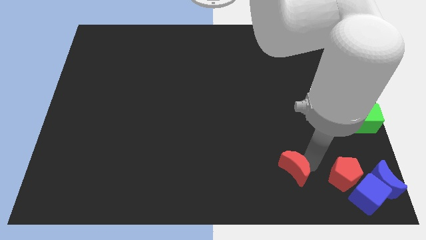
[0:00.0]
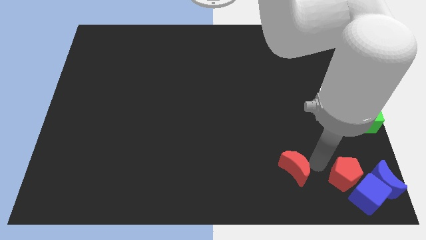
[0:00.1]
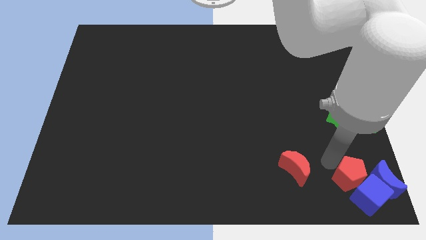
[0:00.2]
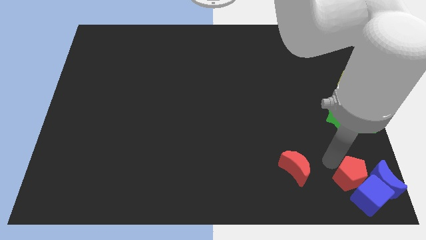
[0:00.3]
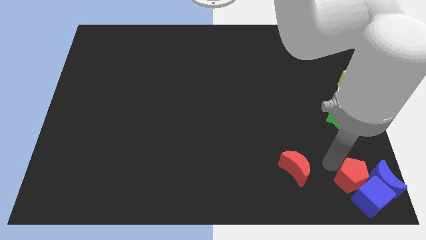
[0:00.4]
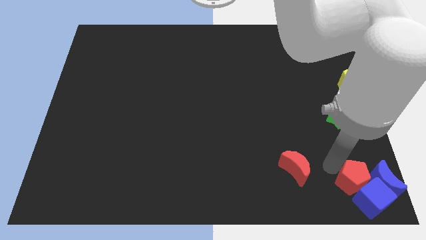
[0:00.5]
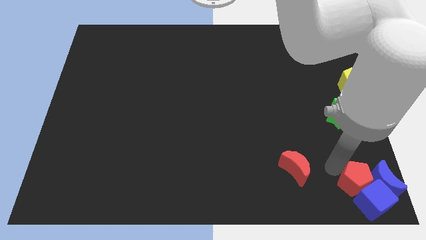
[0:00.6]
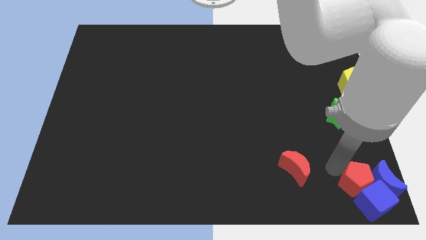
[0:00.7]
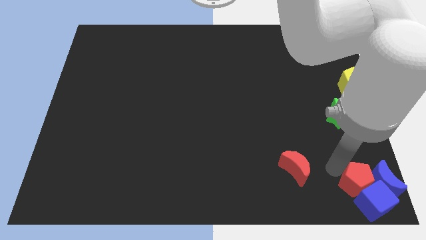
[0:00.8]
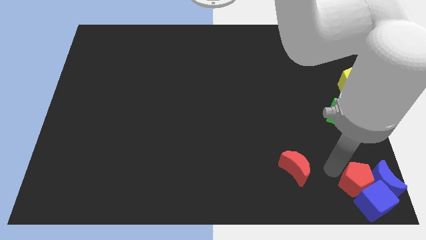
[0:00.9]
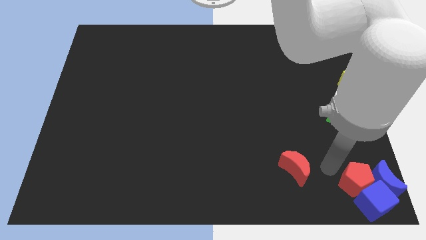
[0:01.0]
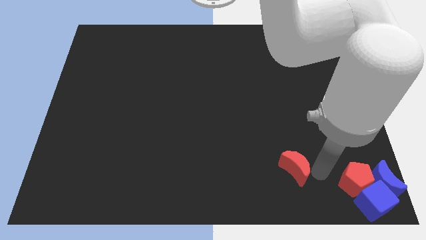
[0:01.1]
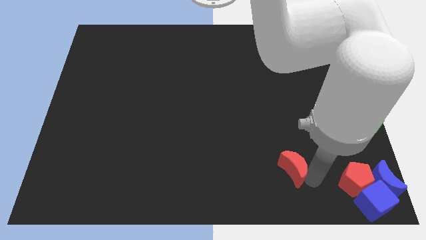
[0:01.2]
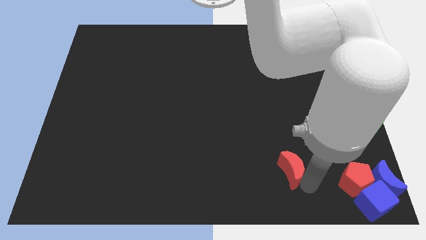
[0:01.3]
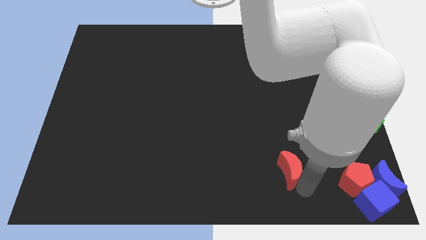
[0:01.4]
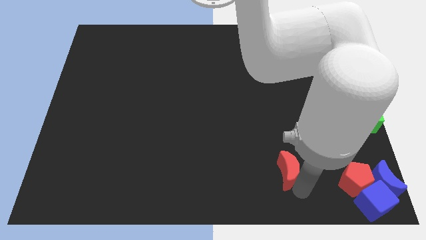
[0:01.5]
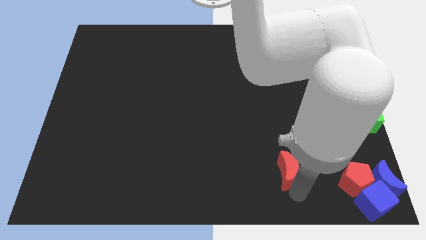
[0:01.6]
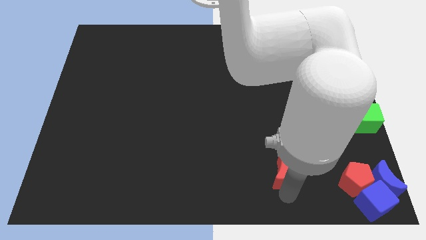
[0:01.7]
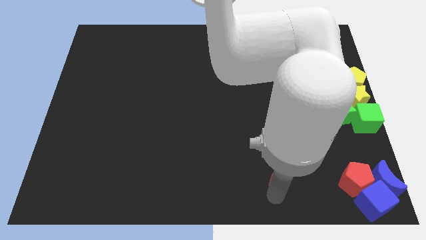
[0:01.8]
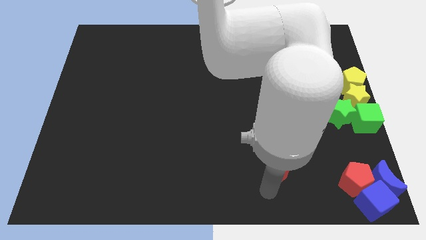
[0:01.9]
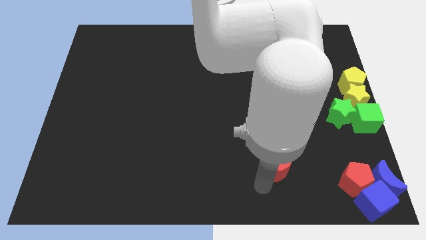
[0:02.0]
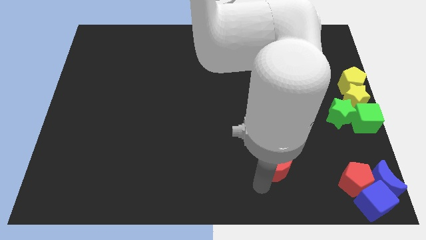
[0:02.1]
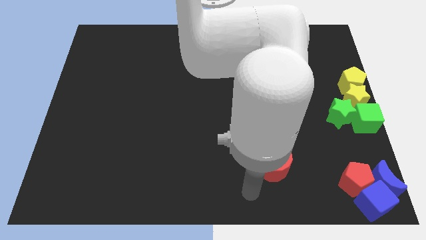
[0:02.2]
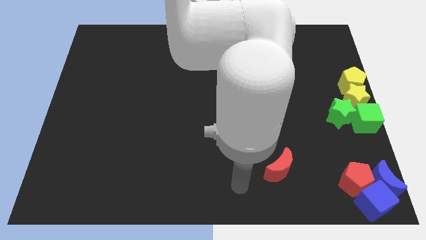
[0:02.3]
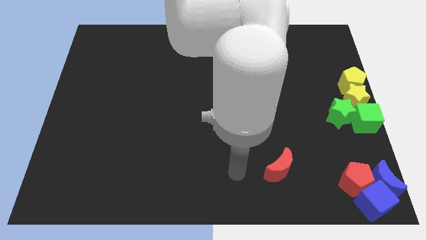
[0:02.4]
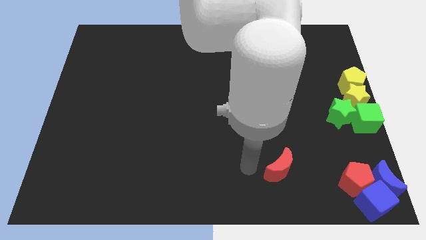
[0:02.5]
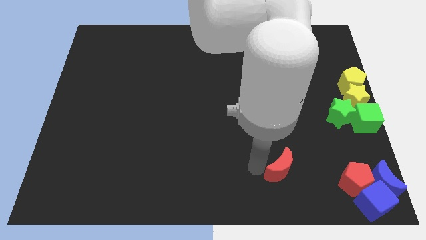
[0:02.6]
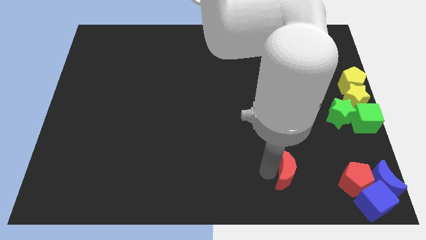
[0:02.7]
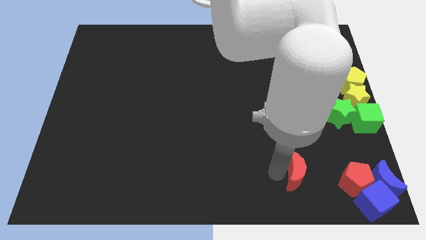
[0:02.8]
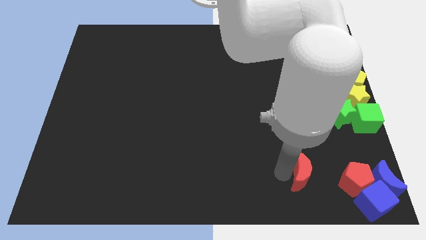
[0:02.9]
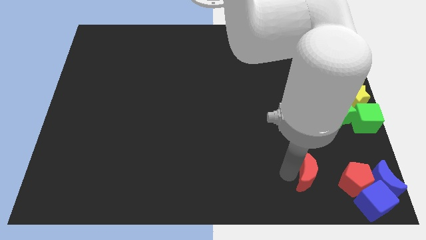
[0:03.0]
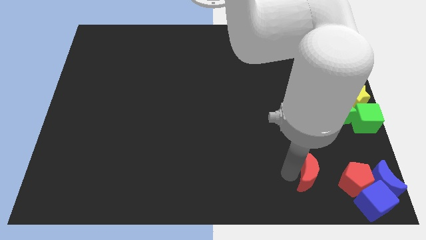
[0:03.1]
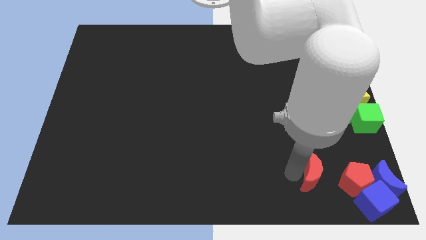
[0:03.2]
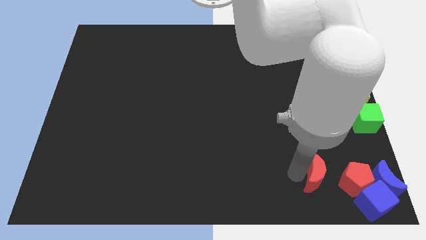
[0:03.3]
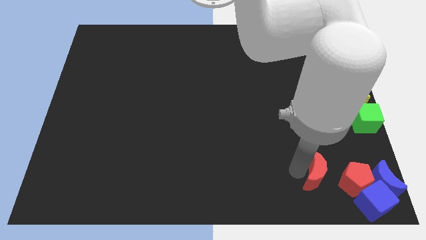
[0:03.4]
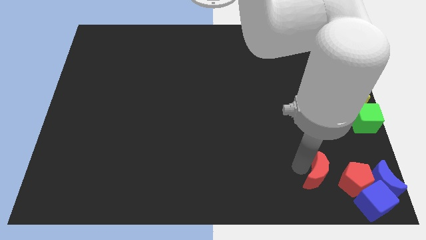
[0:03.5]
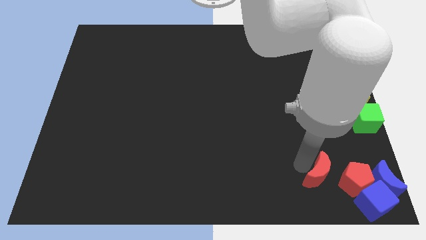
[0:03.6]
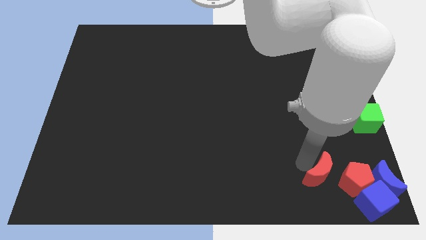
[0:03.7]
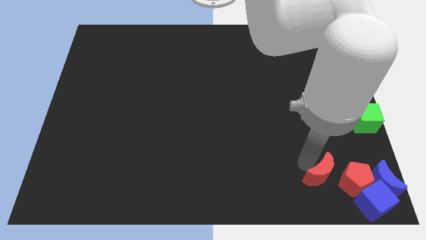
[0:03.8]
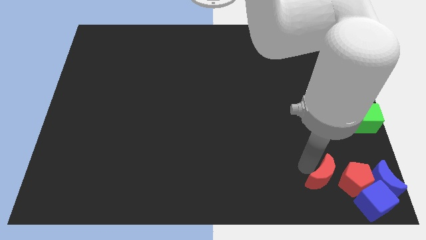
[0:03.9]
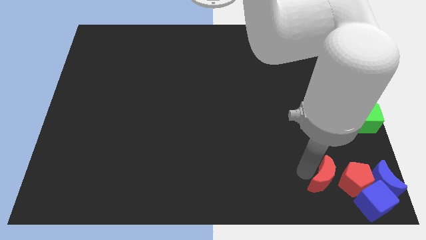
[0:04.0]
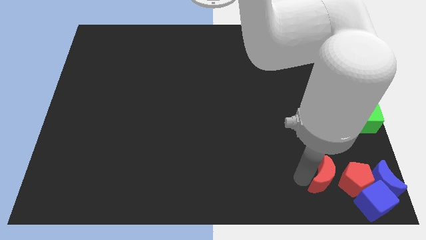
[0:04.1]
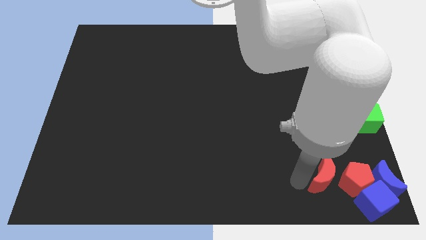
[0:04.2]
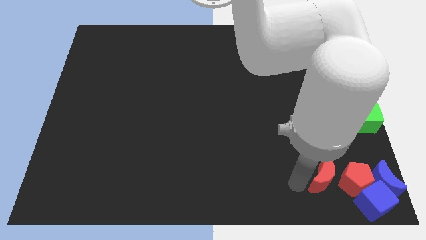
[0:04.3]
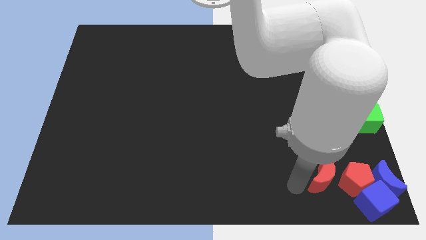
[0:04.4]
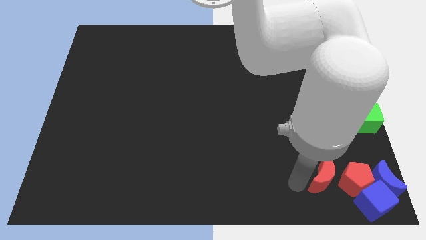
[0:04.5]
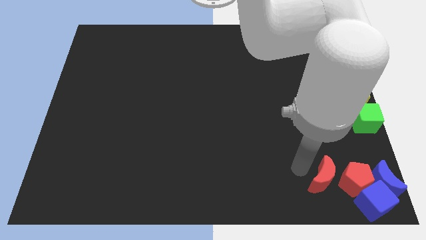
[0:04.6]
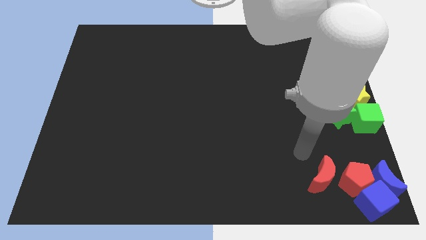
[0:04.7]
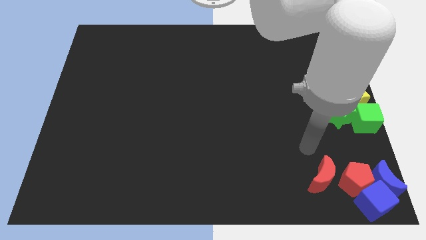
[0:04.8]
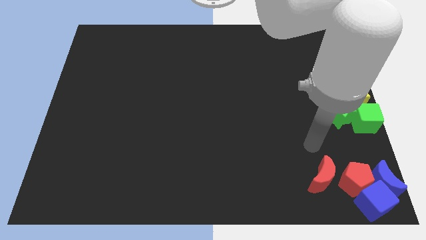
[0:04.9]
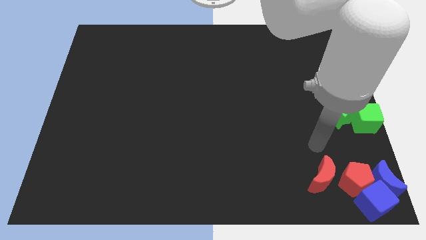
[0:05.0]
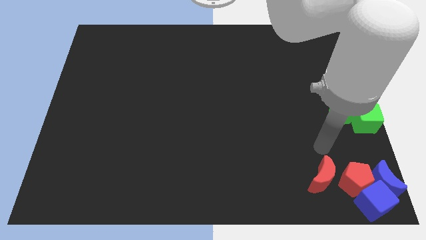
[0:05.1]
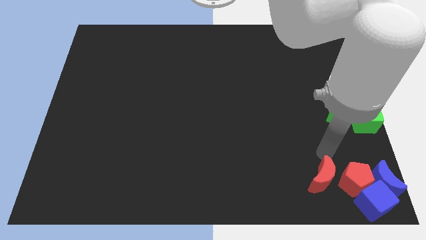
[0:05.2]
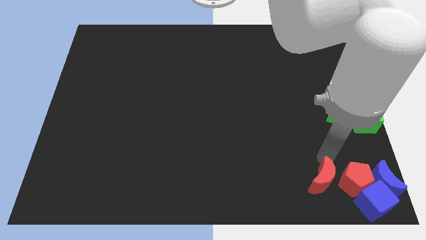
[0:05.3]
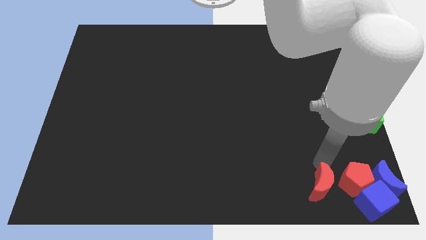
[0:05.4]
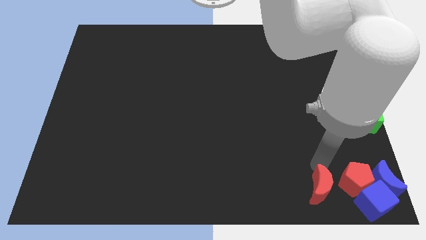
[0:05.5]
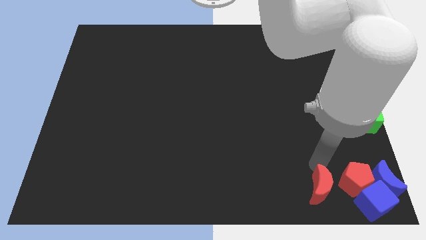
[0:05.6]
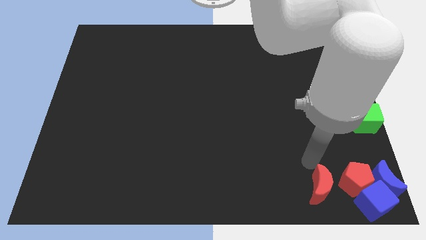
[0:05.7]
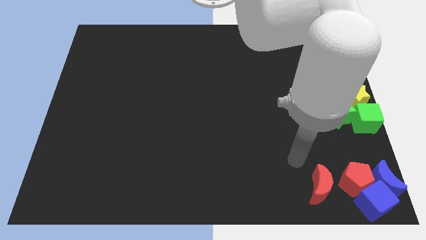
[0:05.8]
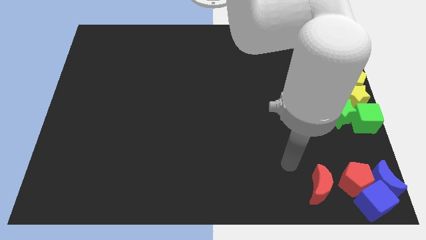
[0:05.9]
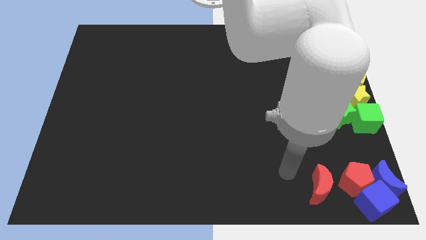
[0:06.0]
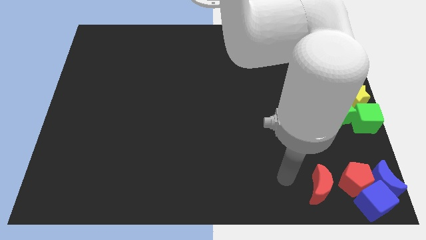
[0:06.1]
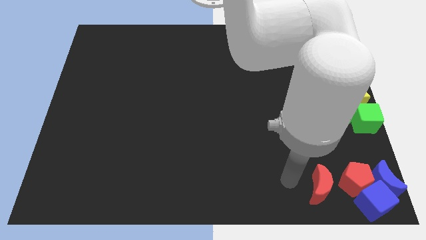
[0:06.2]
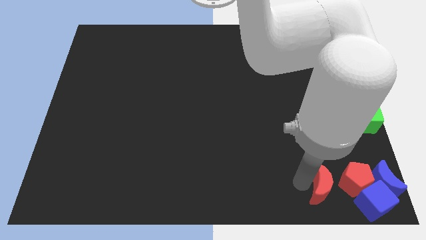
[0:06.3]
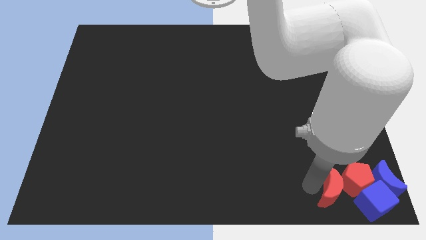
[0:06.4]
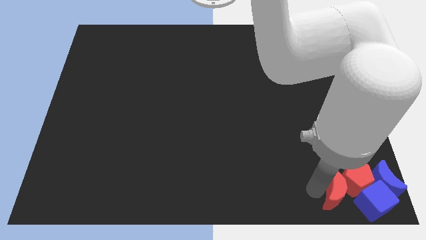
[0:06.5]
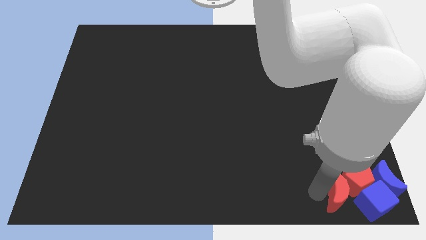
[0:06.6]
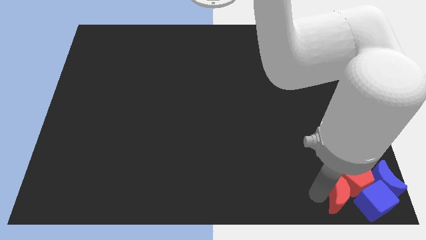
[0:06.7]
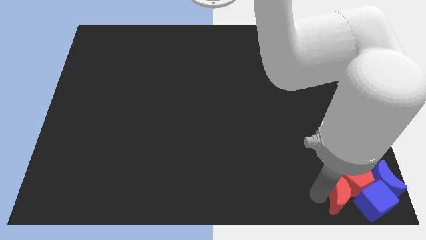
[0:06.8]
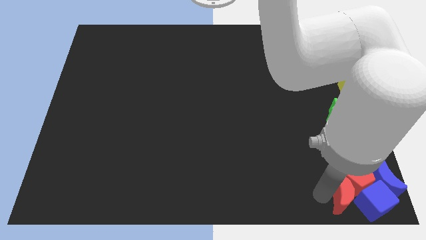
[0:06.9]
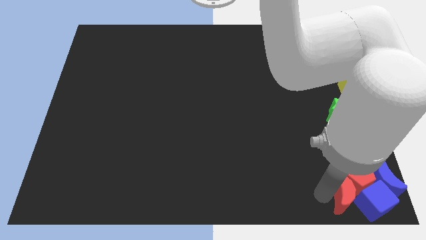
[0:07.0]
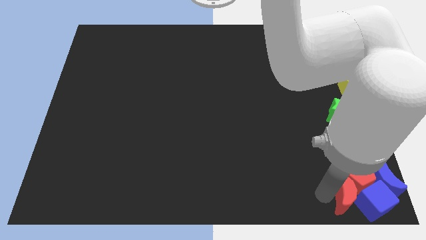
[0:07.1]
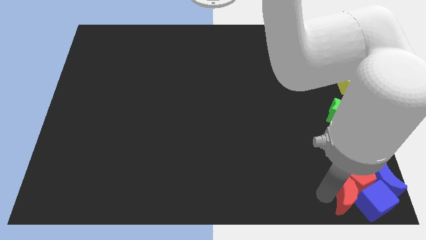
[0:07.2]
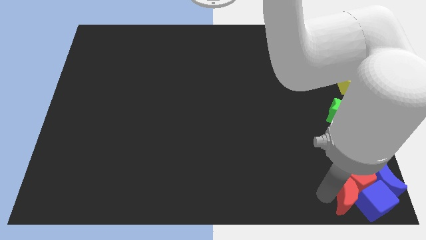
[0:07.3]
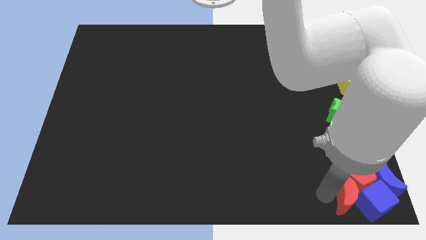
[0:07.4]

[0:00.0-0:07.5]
group up red blocks with the blue blocks at the bottom right of the table

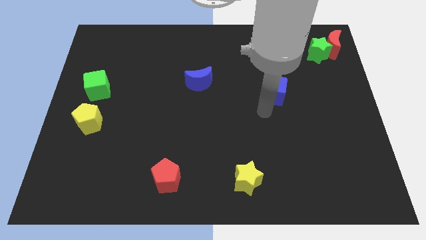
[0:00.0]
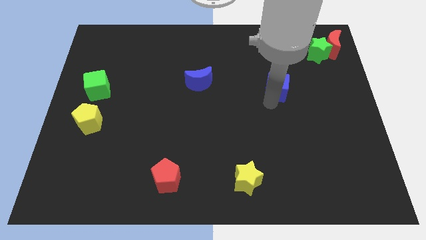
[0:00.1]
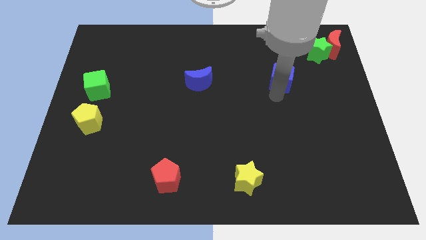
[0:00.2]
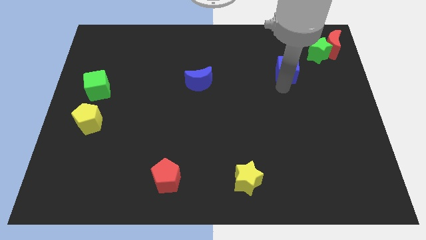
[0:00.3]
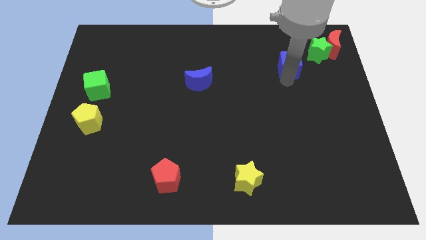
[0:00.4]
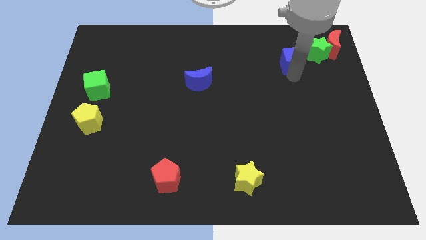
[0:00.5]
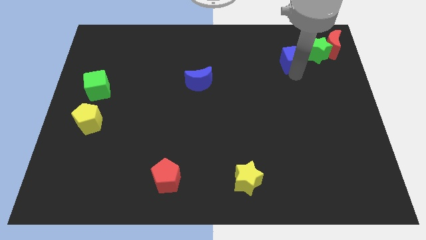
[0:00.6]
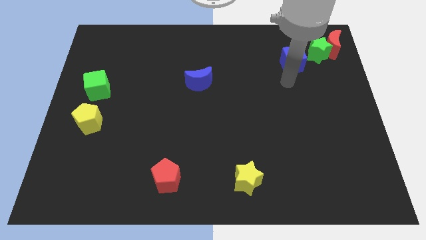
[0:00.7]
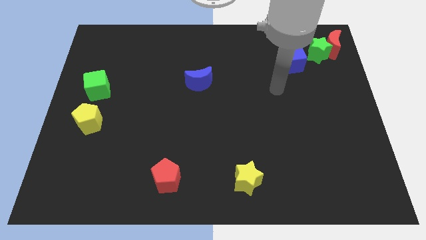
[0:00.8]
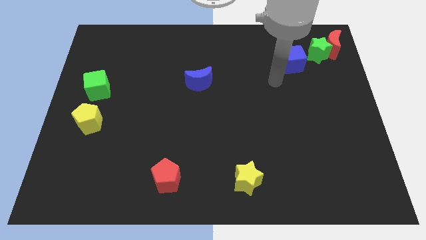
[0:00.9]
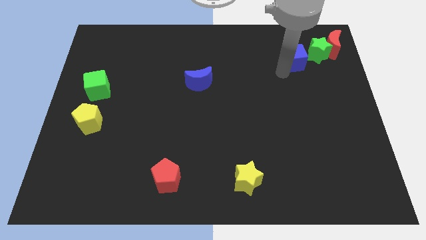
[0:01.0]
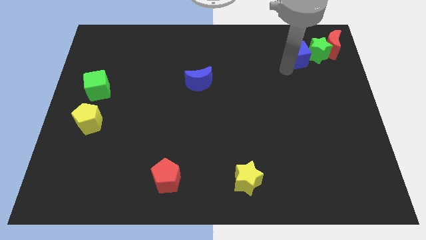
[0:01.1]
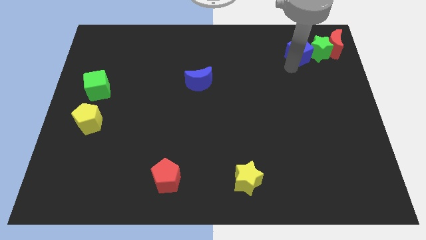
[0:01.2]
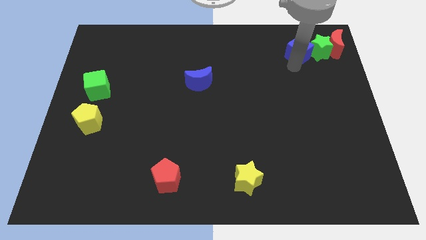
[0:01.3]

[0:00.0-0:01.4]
place blue cube to the left of green star
